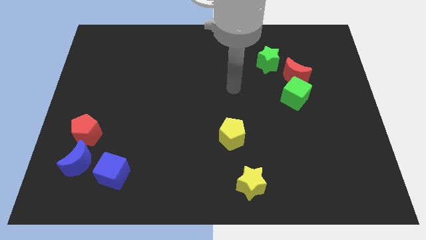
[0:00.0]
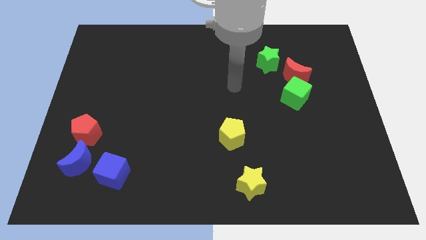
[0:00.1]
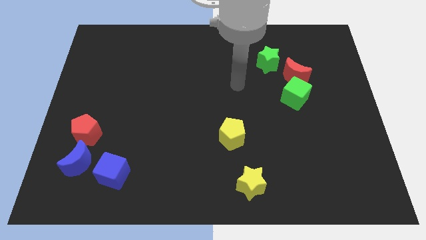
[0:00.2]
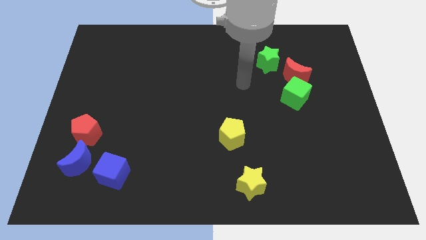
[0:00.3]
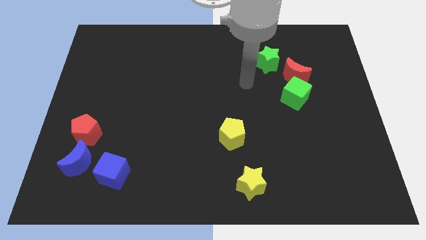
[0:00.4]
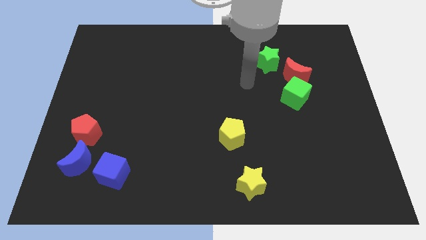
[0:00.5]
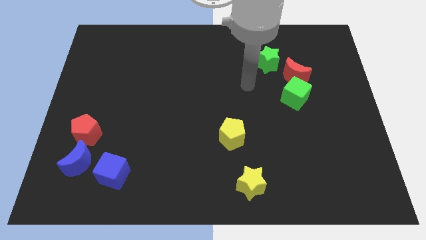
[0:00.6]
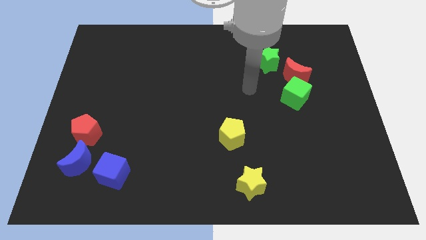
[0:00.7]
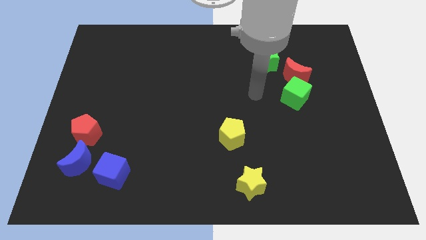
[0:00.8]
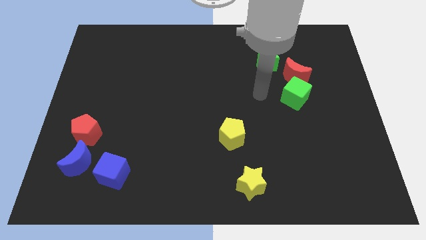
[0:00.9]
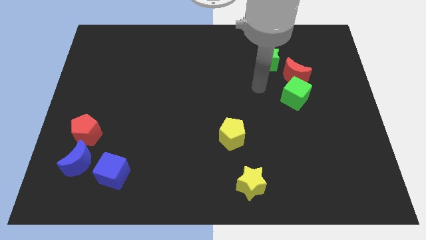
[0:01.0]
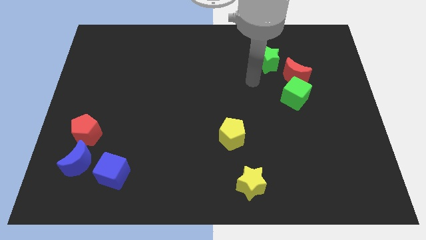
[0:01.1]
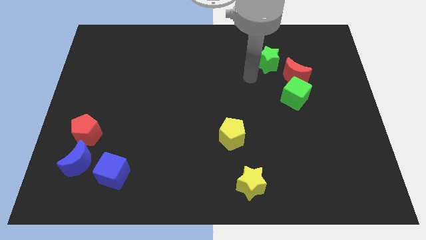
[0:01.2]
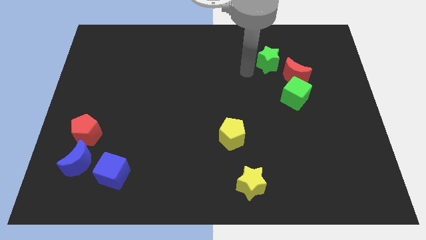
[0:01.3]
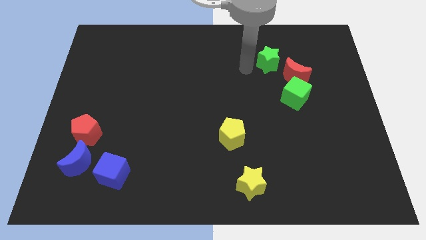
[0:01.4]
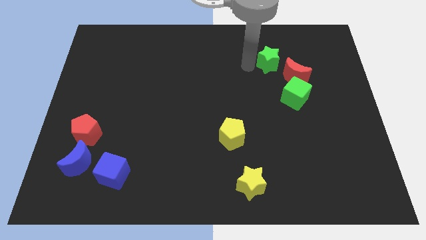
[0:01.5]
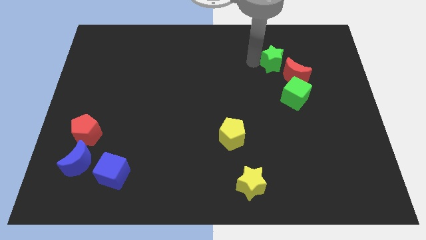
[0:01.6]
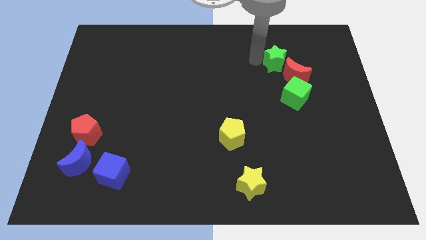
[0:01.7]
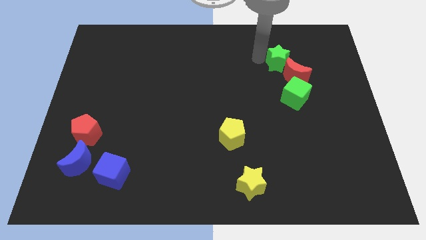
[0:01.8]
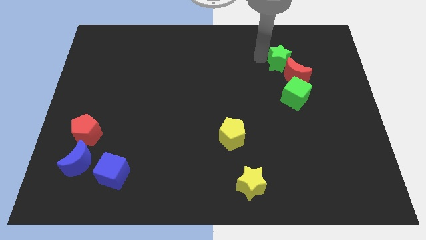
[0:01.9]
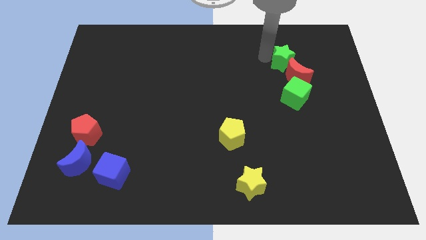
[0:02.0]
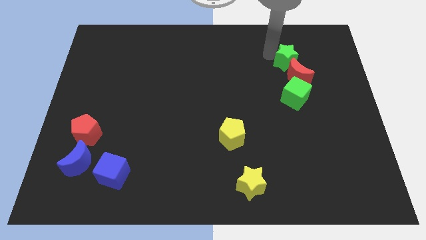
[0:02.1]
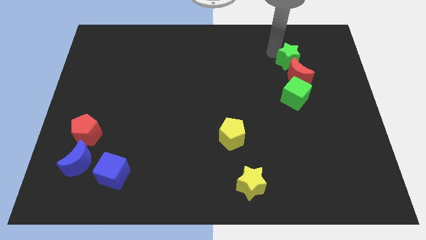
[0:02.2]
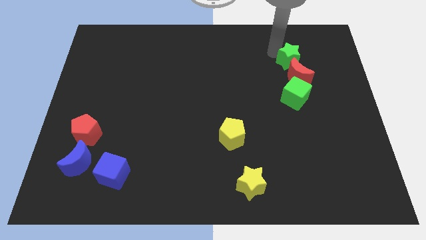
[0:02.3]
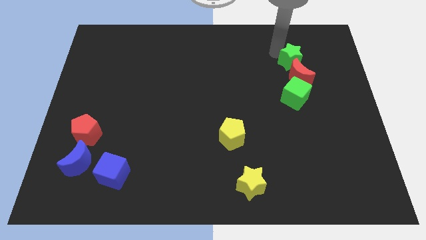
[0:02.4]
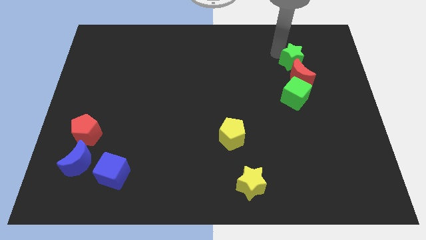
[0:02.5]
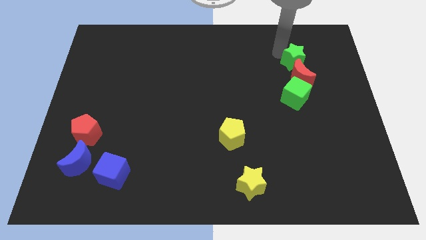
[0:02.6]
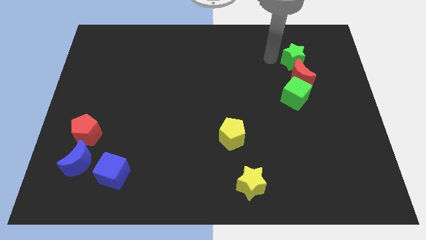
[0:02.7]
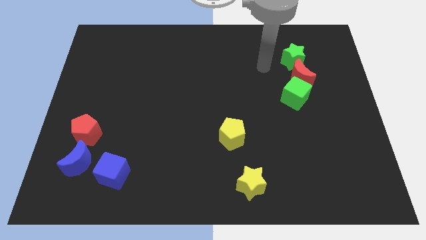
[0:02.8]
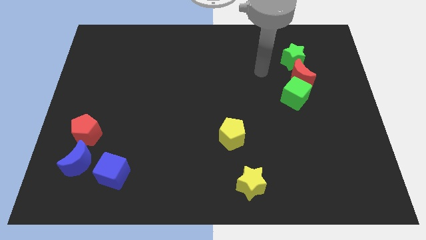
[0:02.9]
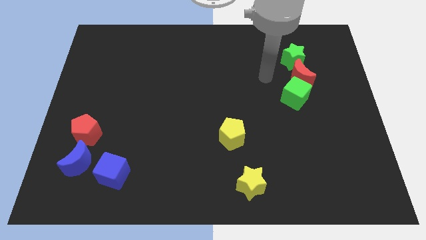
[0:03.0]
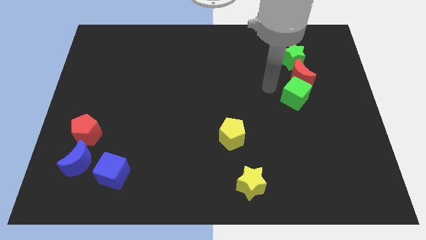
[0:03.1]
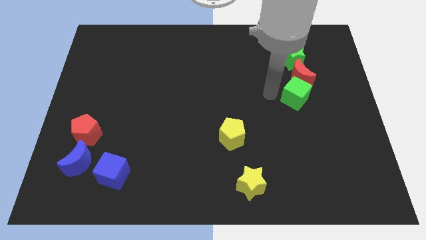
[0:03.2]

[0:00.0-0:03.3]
push the green star above the red crescent

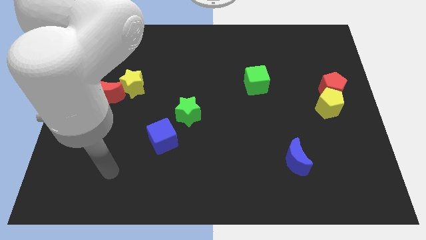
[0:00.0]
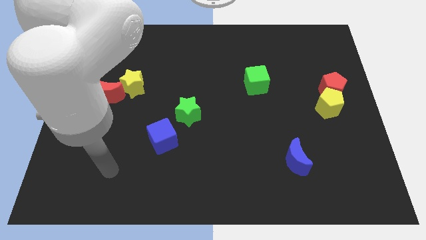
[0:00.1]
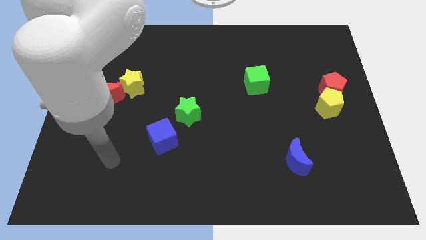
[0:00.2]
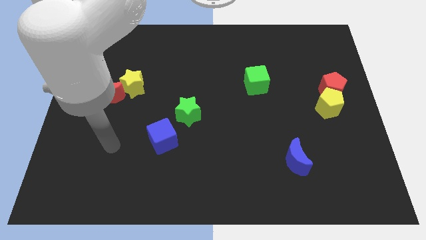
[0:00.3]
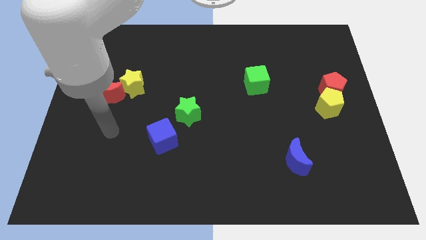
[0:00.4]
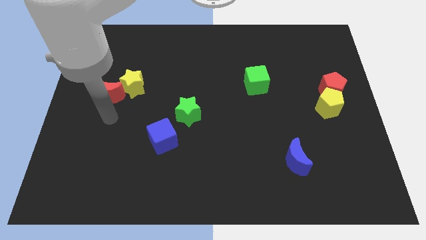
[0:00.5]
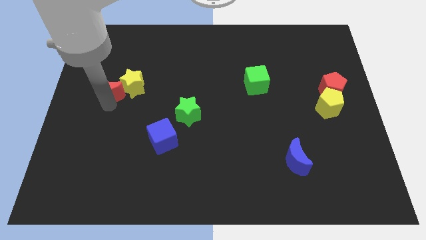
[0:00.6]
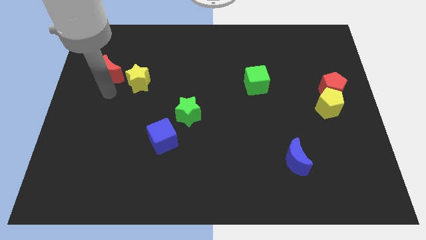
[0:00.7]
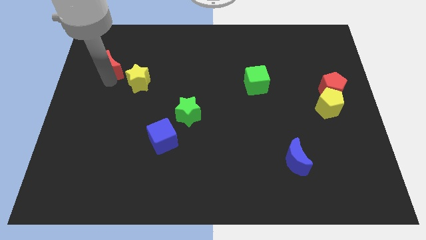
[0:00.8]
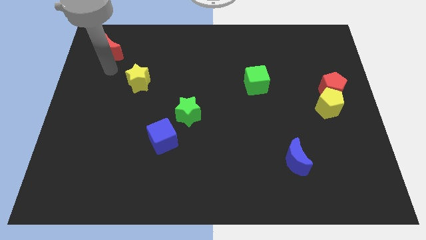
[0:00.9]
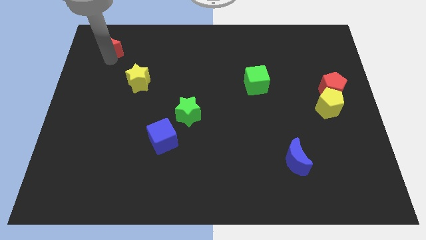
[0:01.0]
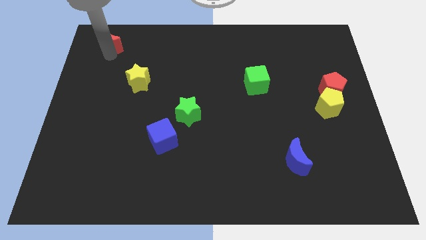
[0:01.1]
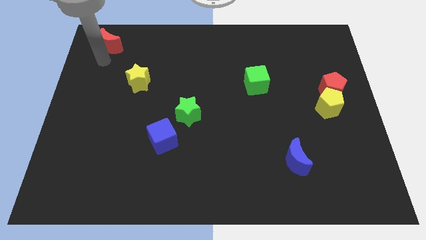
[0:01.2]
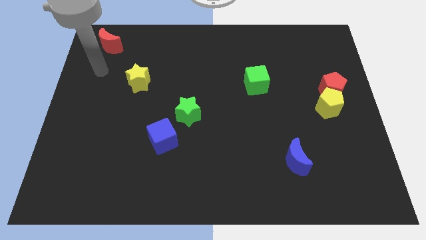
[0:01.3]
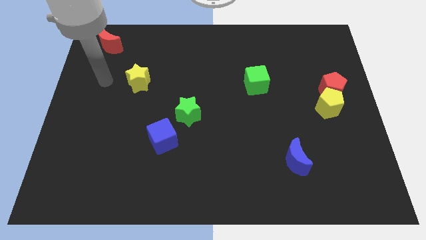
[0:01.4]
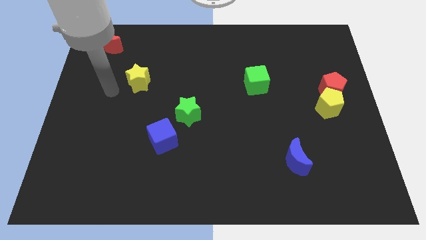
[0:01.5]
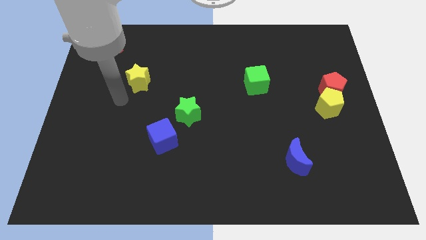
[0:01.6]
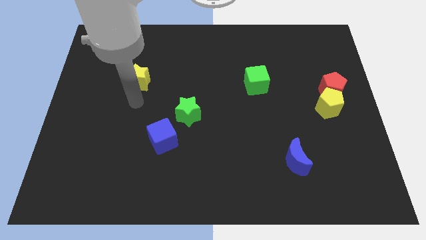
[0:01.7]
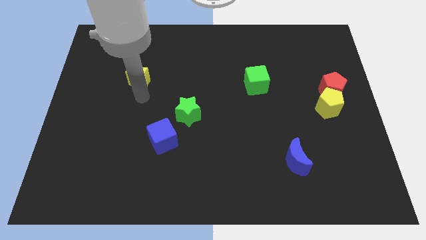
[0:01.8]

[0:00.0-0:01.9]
move the red moon towards the top left side

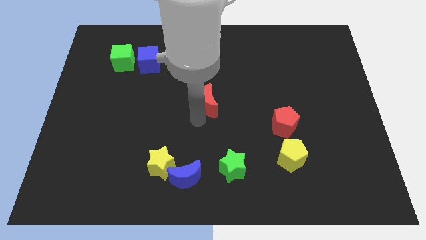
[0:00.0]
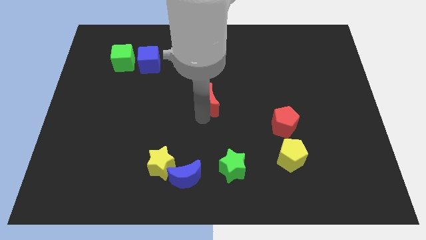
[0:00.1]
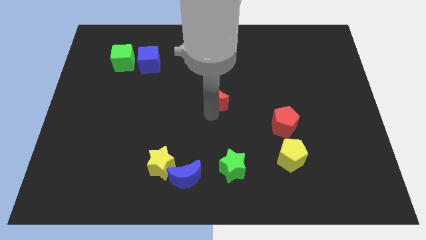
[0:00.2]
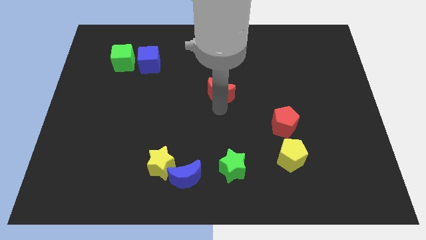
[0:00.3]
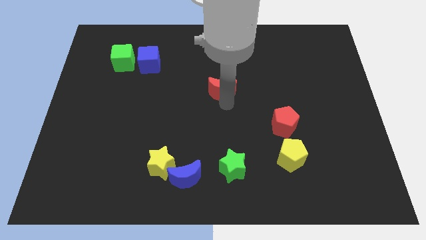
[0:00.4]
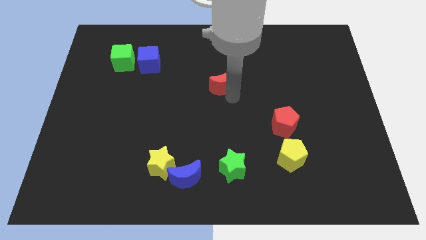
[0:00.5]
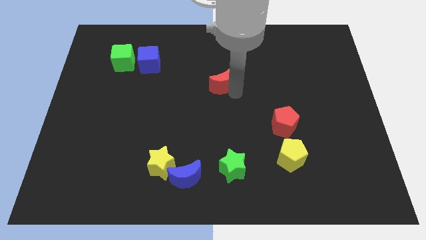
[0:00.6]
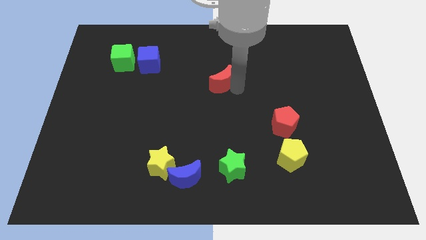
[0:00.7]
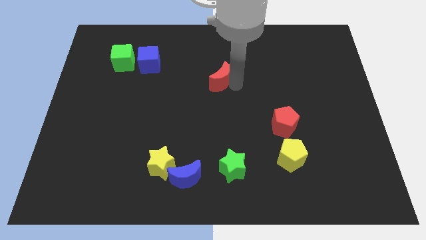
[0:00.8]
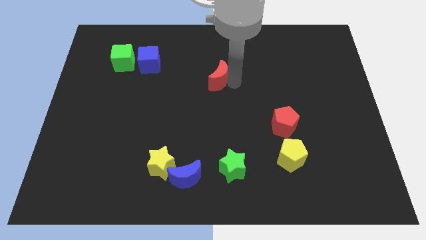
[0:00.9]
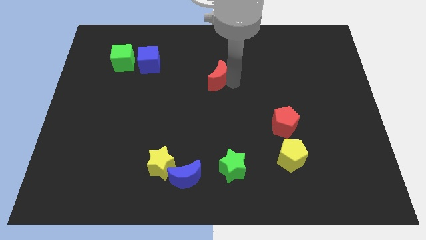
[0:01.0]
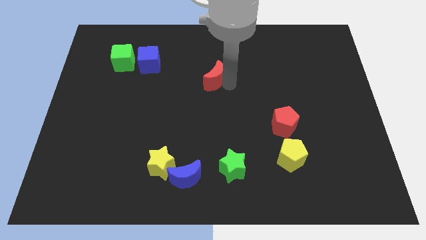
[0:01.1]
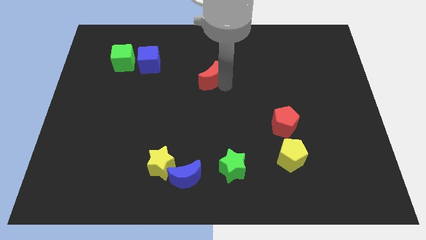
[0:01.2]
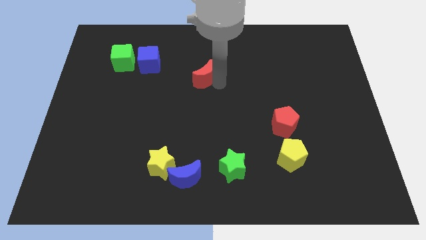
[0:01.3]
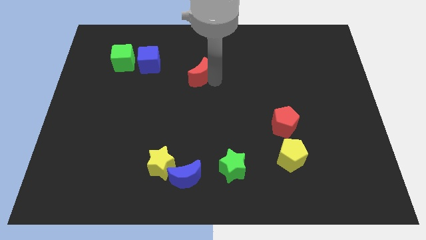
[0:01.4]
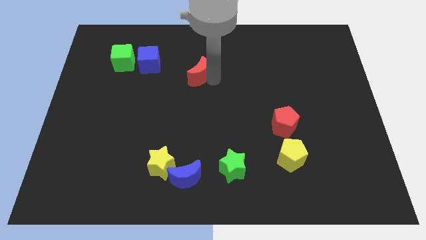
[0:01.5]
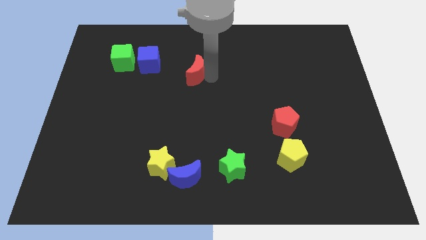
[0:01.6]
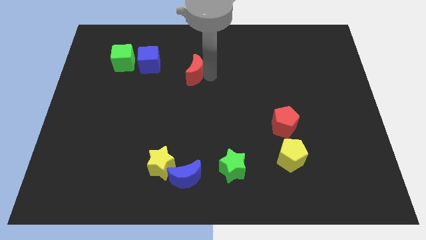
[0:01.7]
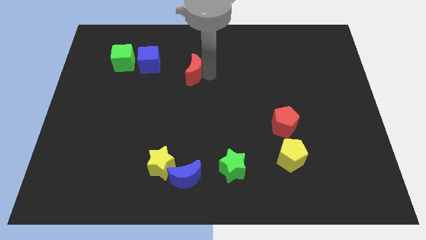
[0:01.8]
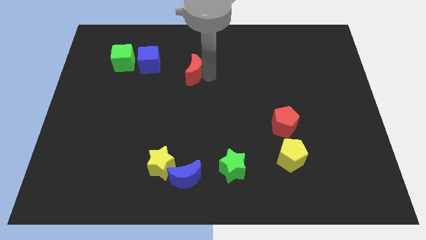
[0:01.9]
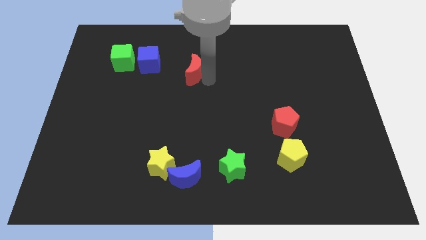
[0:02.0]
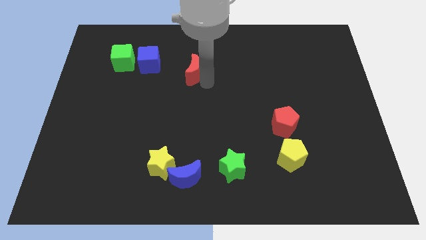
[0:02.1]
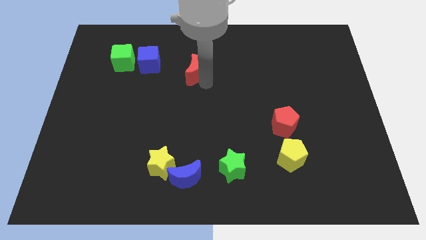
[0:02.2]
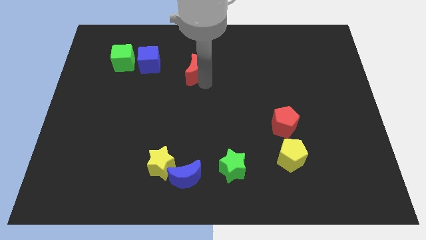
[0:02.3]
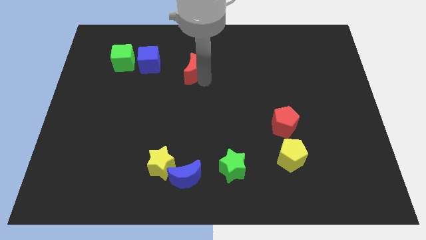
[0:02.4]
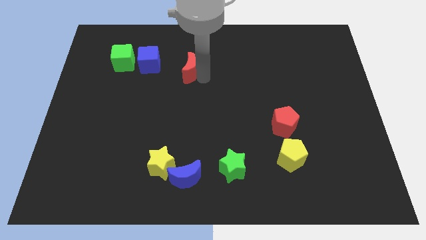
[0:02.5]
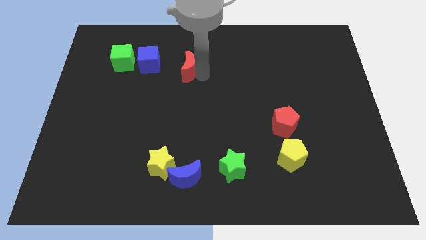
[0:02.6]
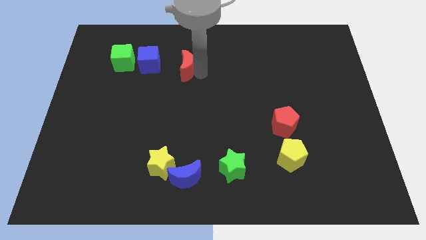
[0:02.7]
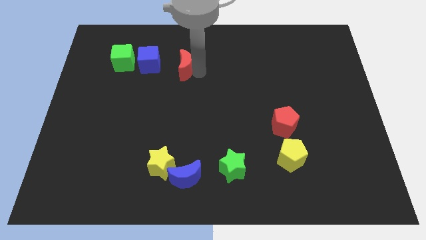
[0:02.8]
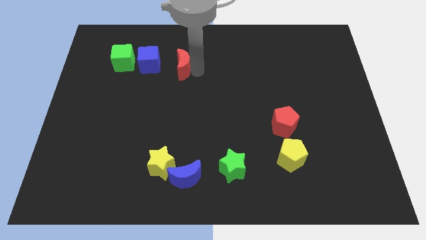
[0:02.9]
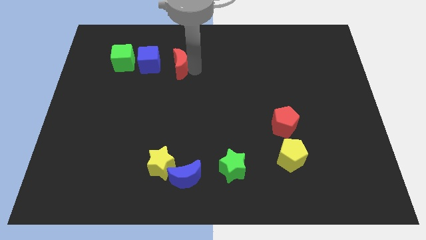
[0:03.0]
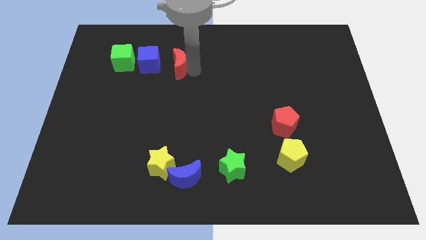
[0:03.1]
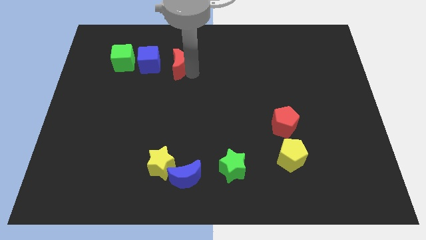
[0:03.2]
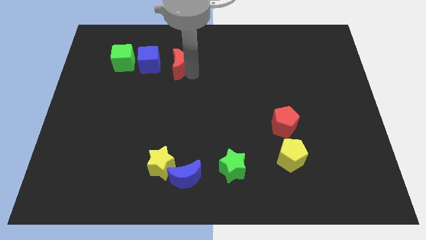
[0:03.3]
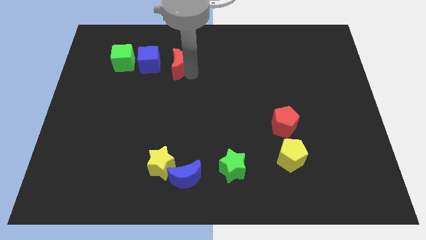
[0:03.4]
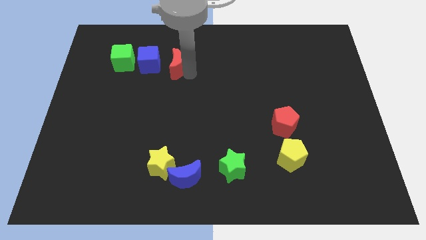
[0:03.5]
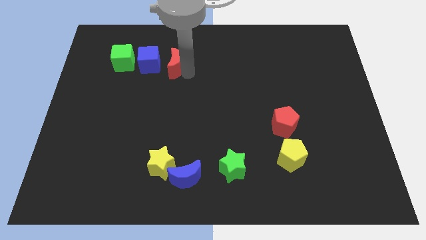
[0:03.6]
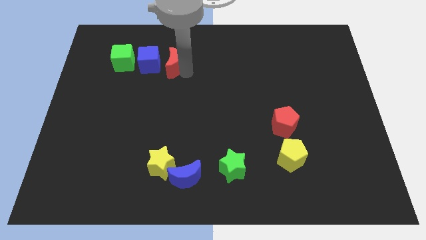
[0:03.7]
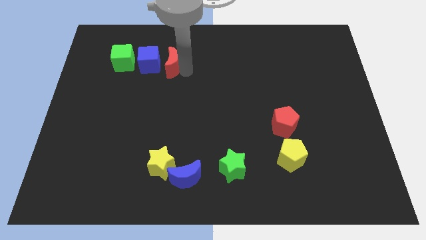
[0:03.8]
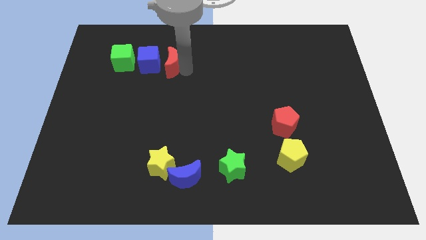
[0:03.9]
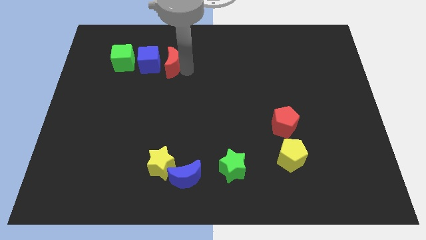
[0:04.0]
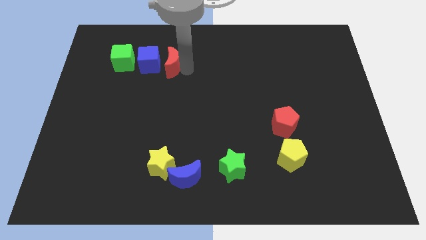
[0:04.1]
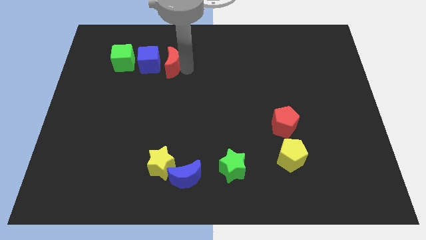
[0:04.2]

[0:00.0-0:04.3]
place red crescent to the right of the blue cube
